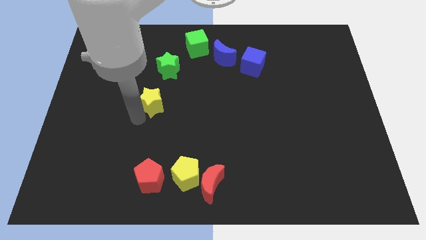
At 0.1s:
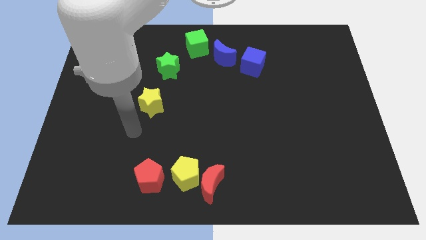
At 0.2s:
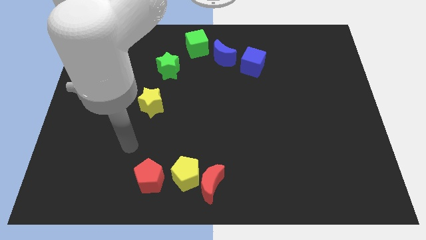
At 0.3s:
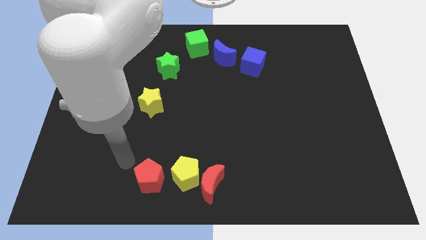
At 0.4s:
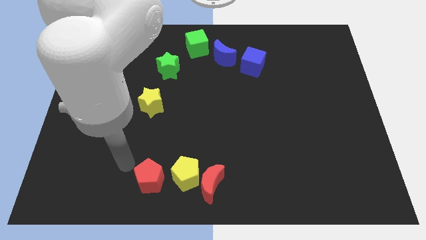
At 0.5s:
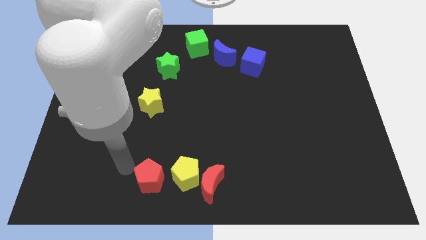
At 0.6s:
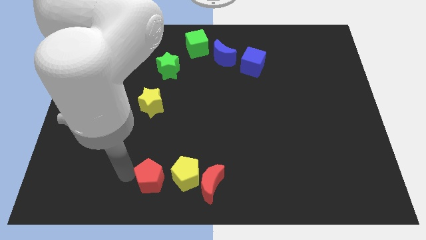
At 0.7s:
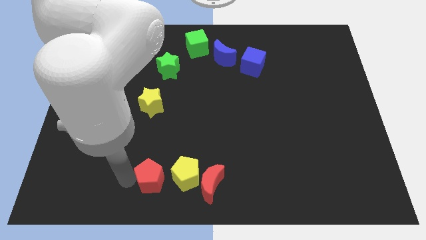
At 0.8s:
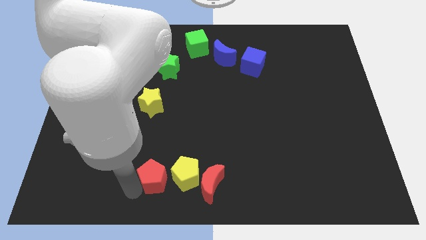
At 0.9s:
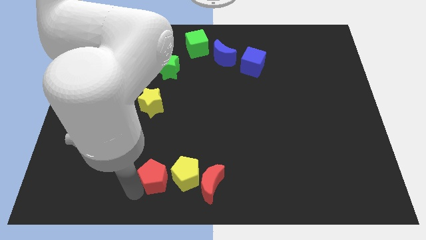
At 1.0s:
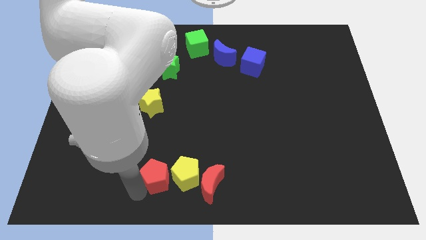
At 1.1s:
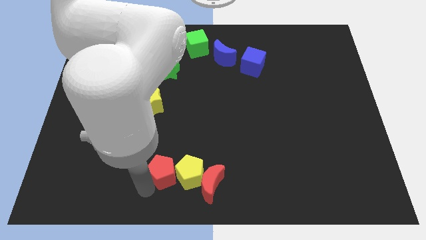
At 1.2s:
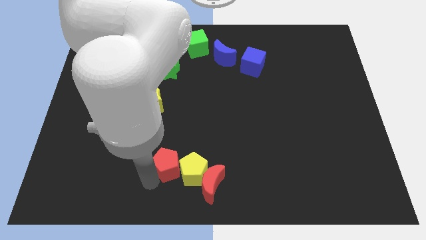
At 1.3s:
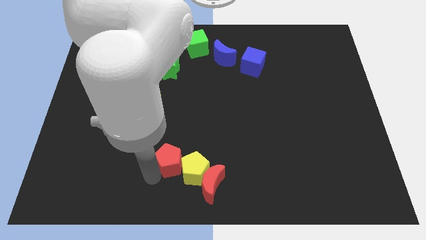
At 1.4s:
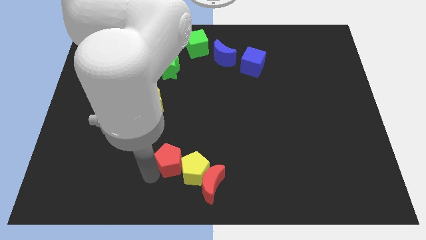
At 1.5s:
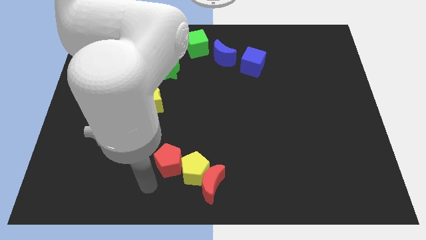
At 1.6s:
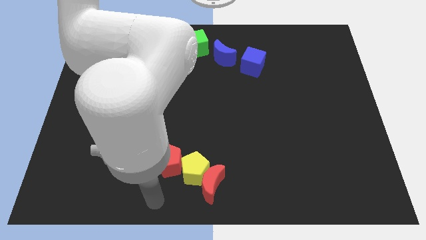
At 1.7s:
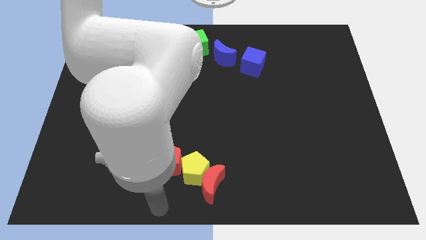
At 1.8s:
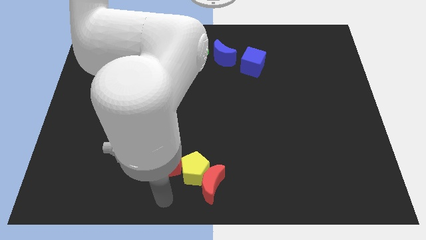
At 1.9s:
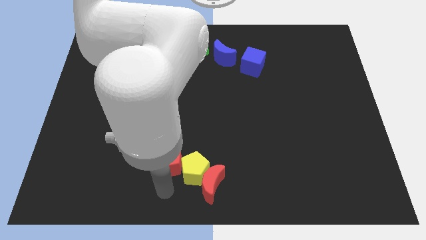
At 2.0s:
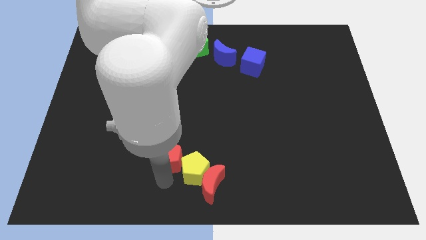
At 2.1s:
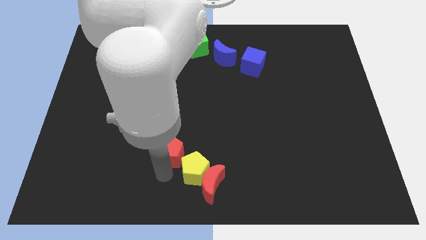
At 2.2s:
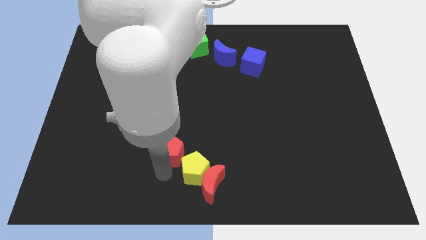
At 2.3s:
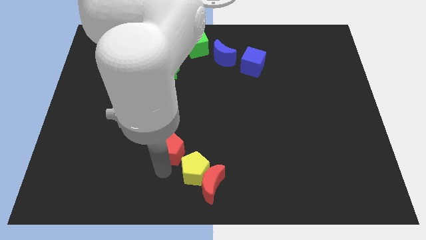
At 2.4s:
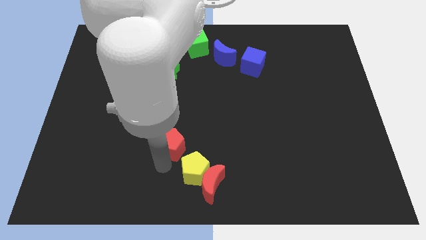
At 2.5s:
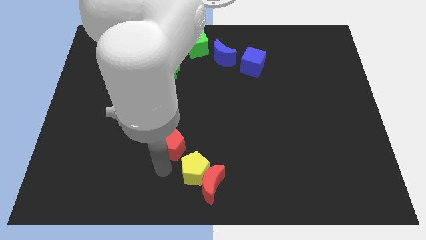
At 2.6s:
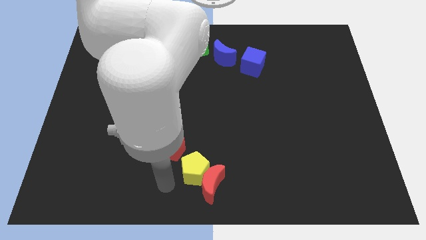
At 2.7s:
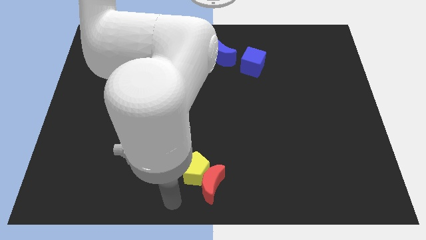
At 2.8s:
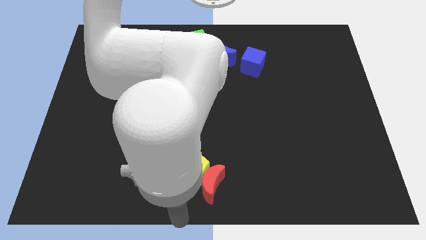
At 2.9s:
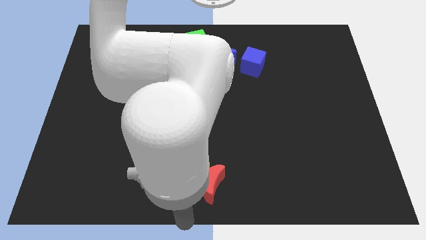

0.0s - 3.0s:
move the red pentagon in between the yellow blocks

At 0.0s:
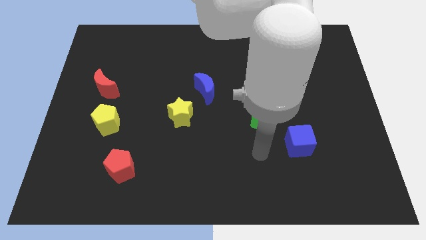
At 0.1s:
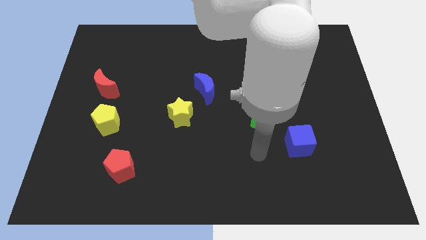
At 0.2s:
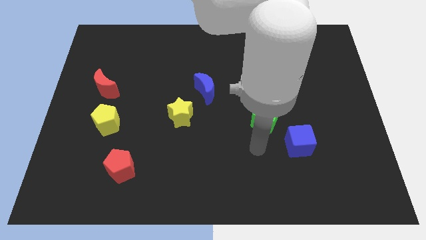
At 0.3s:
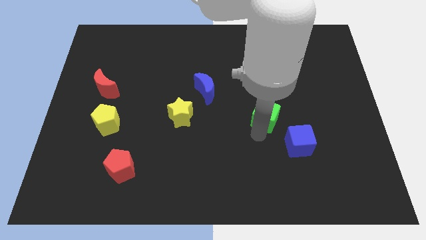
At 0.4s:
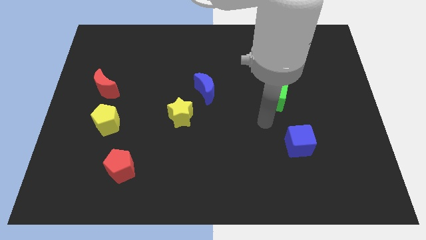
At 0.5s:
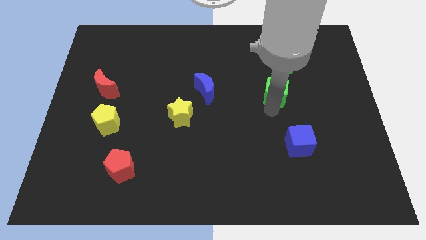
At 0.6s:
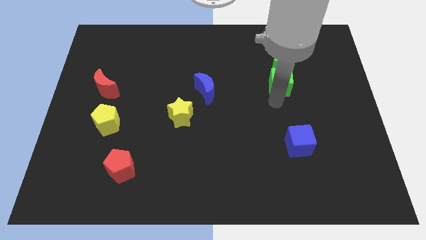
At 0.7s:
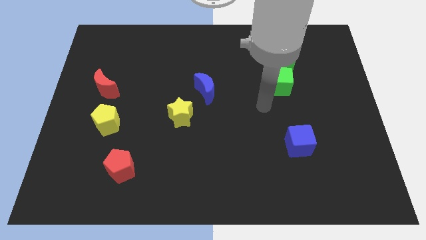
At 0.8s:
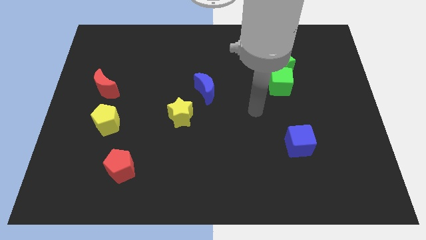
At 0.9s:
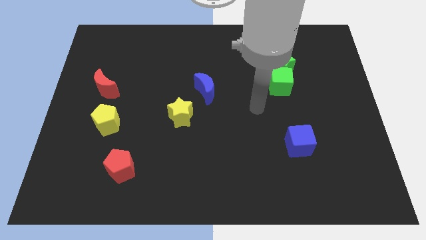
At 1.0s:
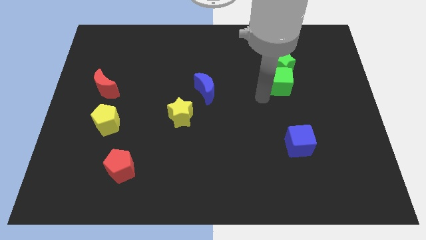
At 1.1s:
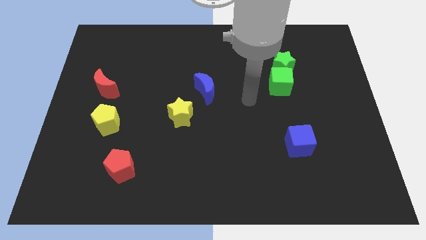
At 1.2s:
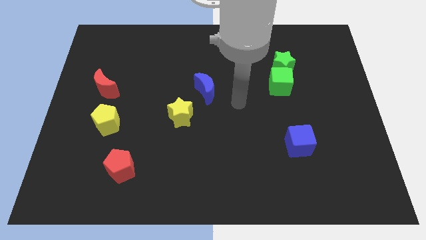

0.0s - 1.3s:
move the green cube close to the bottom of the green star

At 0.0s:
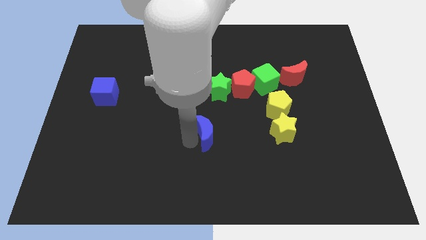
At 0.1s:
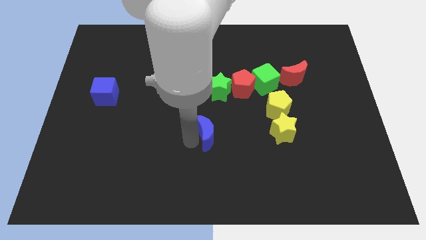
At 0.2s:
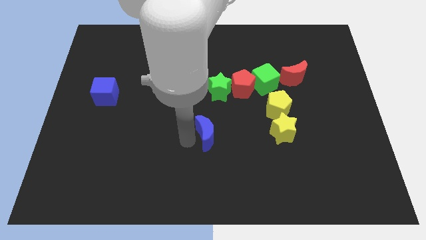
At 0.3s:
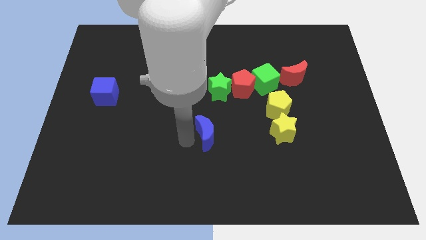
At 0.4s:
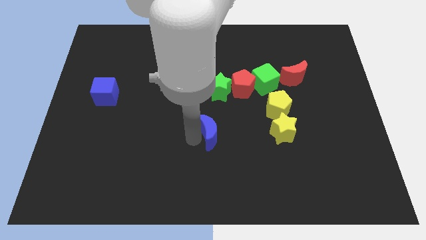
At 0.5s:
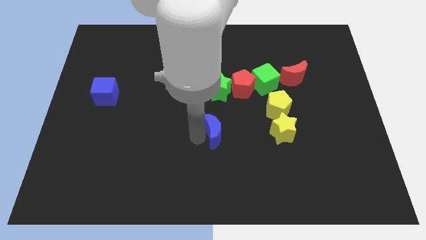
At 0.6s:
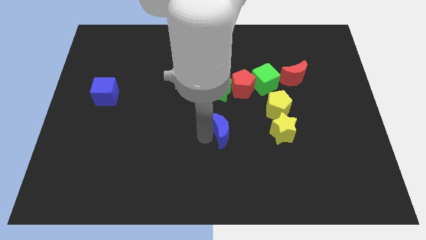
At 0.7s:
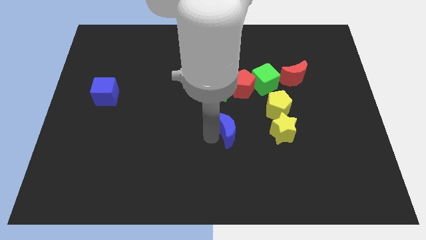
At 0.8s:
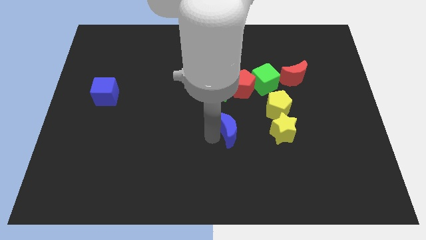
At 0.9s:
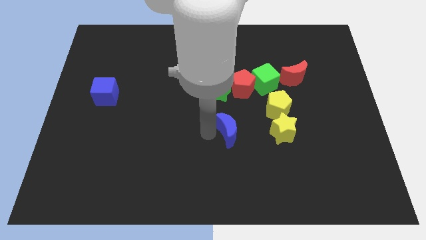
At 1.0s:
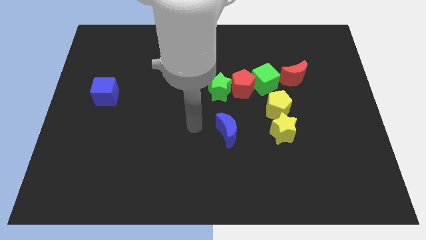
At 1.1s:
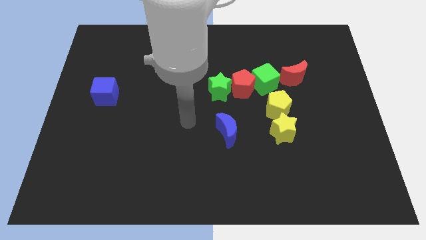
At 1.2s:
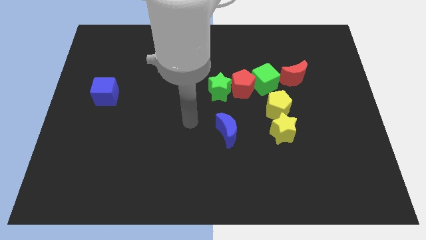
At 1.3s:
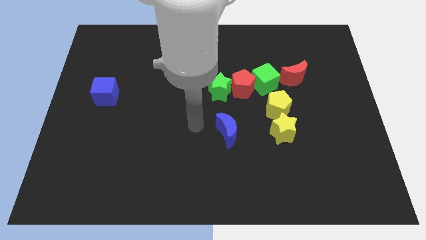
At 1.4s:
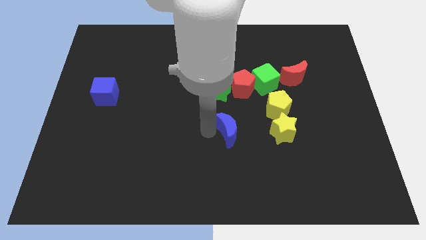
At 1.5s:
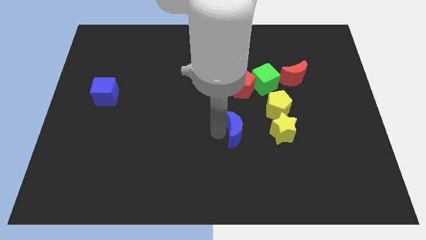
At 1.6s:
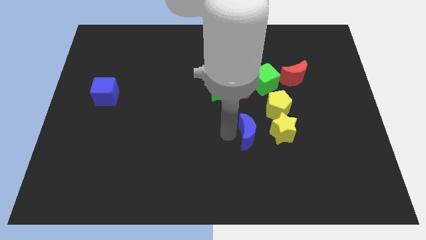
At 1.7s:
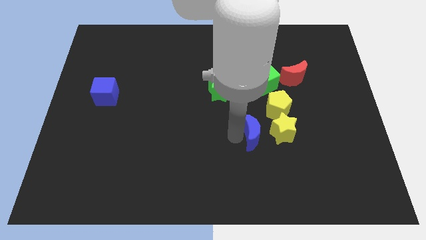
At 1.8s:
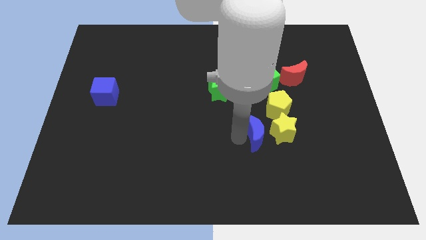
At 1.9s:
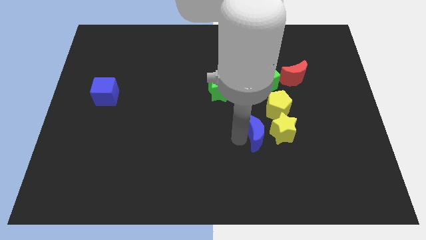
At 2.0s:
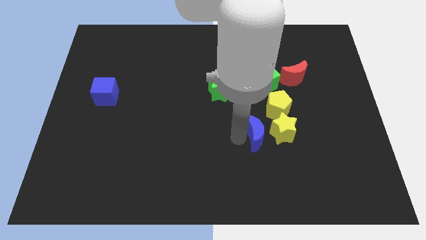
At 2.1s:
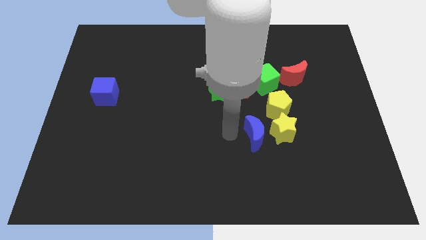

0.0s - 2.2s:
place blue crescent left to the yellow star

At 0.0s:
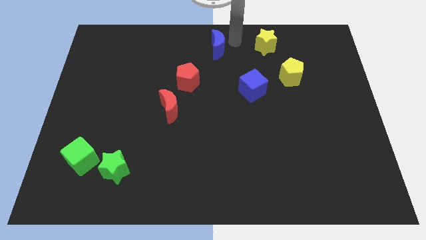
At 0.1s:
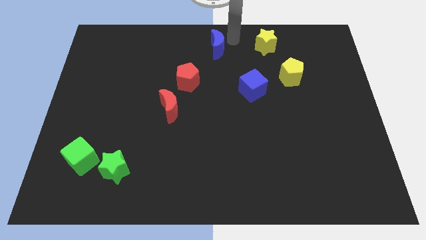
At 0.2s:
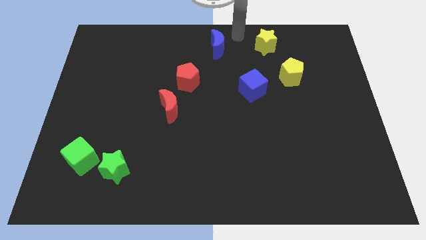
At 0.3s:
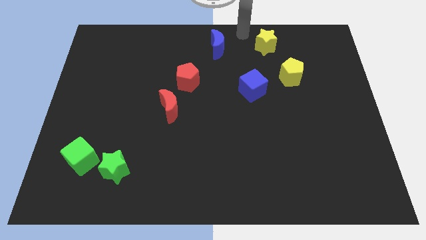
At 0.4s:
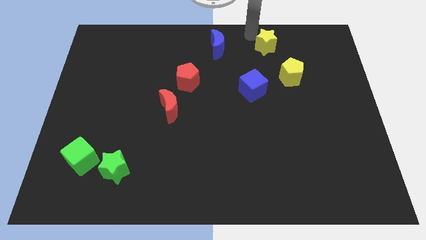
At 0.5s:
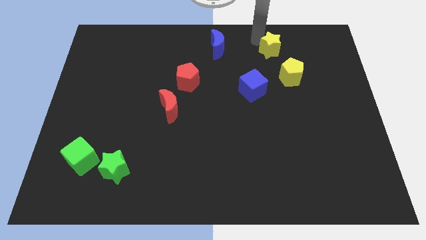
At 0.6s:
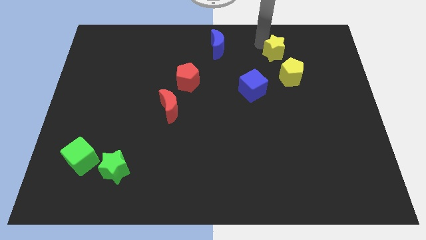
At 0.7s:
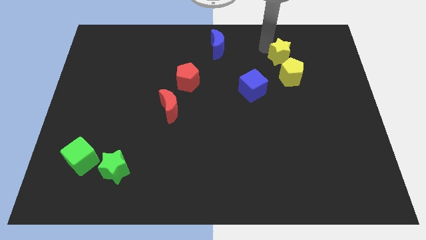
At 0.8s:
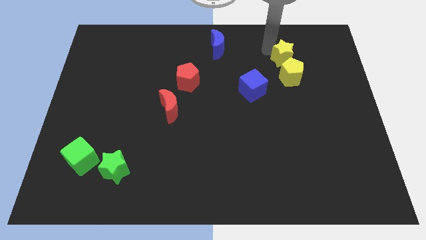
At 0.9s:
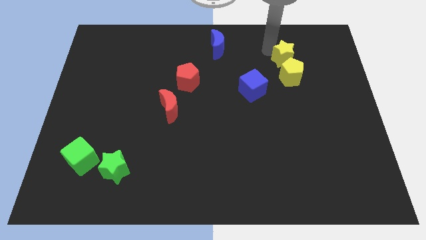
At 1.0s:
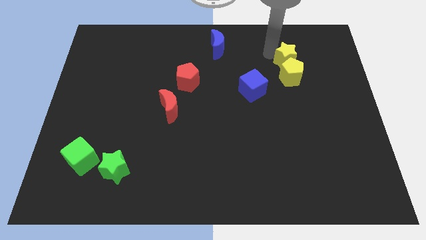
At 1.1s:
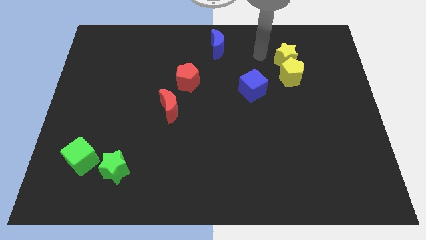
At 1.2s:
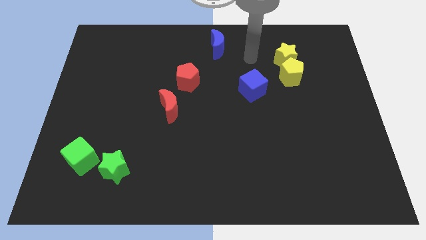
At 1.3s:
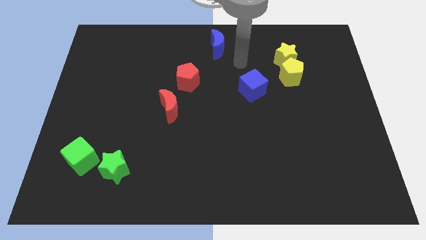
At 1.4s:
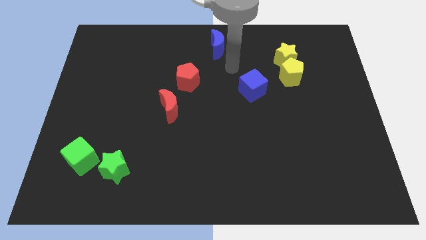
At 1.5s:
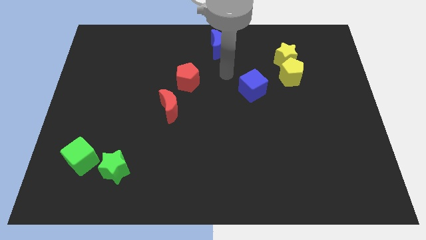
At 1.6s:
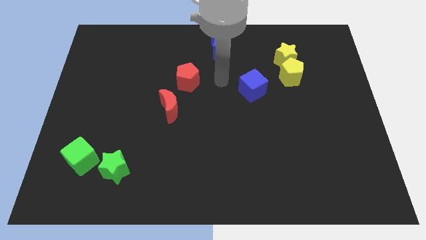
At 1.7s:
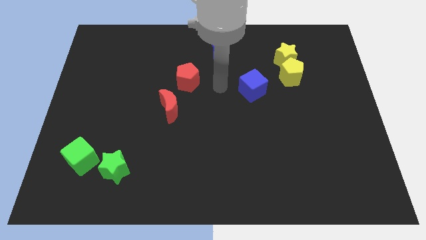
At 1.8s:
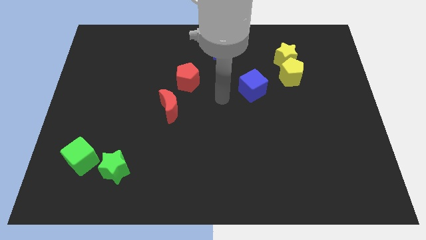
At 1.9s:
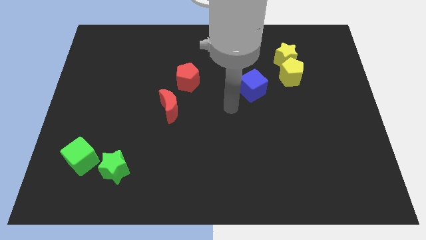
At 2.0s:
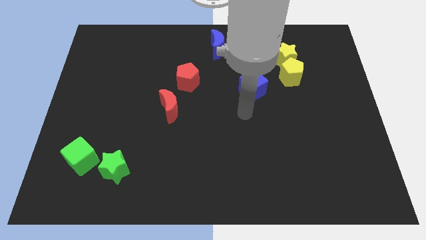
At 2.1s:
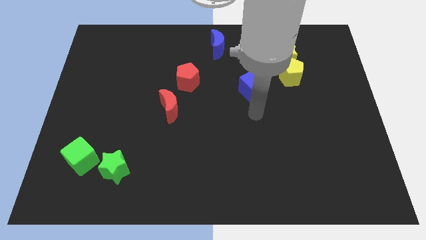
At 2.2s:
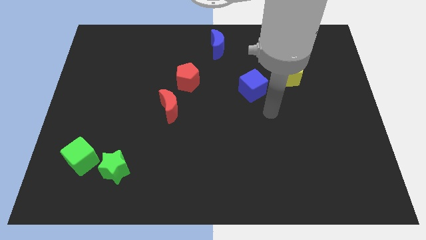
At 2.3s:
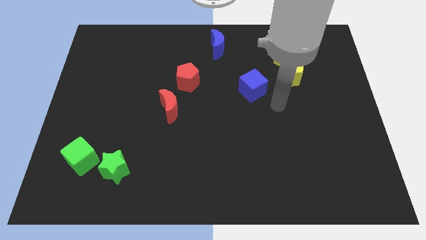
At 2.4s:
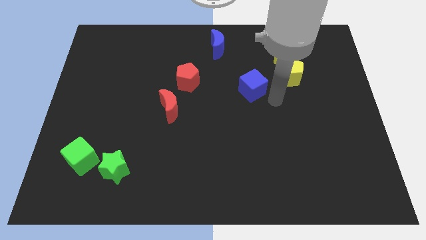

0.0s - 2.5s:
push the yellow star into yellow pentagon
